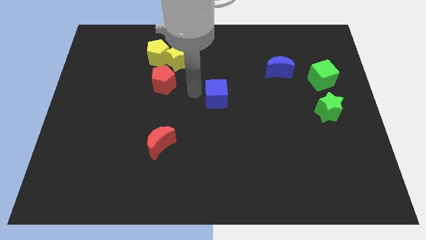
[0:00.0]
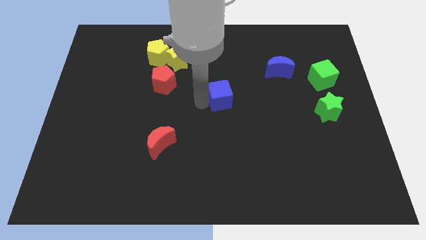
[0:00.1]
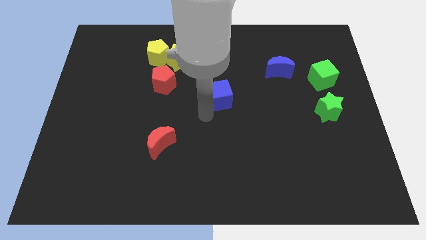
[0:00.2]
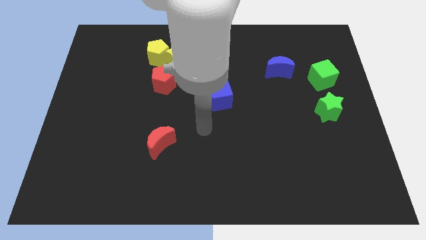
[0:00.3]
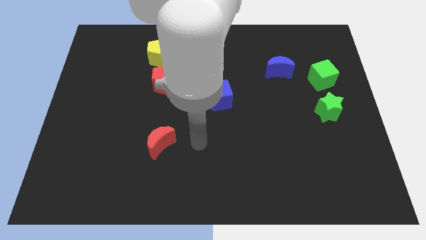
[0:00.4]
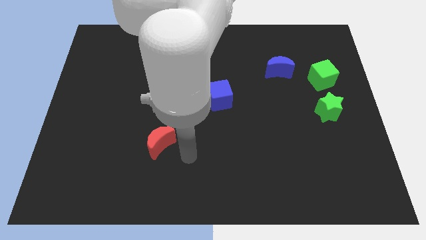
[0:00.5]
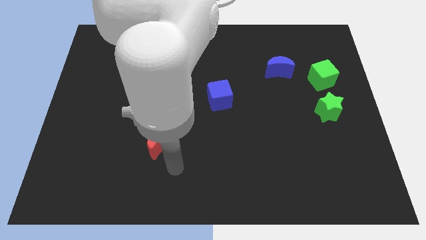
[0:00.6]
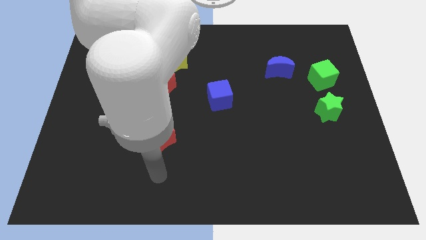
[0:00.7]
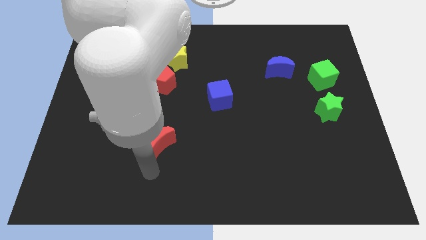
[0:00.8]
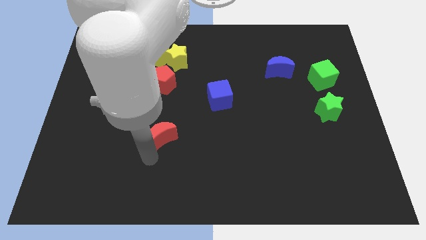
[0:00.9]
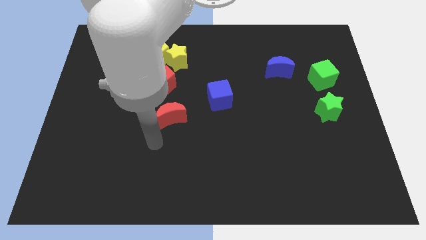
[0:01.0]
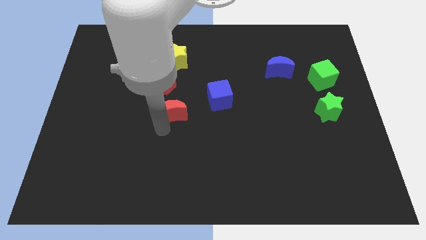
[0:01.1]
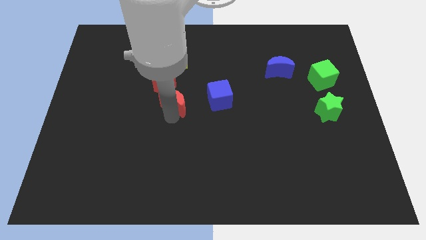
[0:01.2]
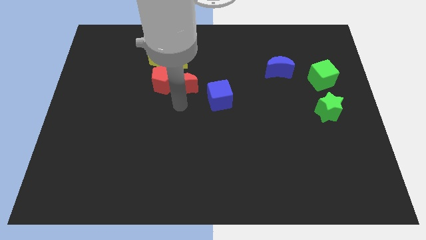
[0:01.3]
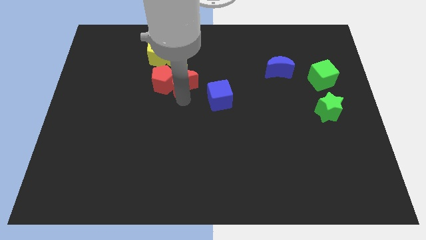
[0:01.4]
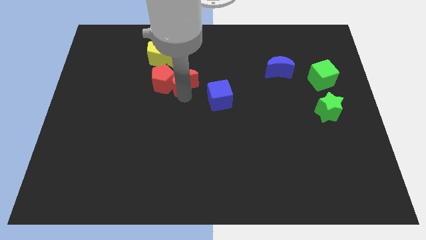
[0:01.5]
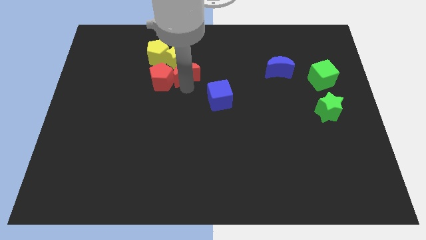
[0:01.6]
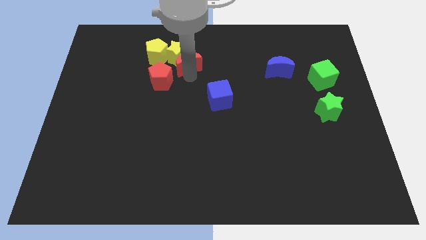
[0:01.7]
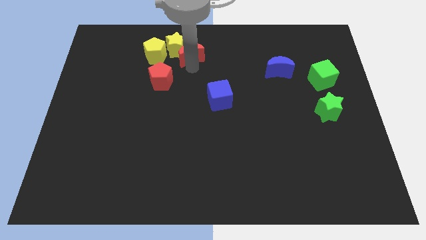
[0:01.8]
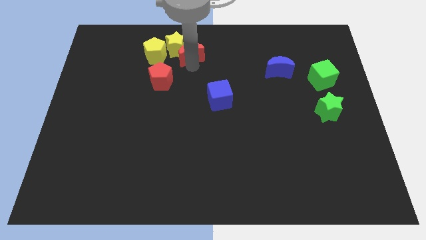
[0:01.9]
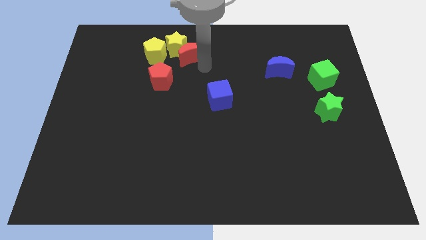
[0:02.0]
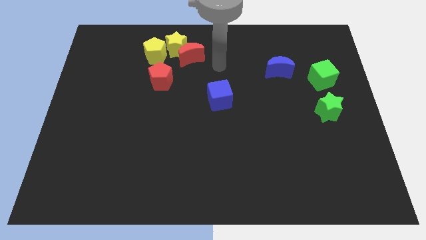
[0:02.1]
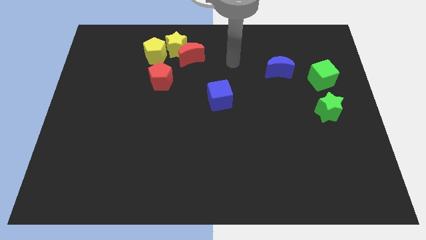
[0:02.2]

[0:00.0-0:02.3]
push the red crescent to the bottom right side of the yellow star

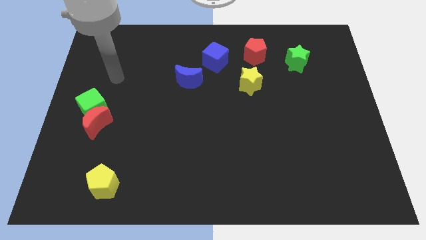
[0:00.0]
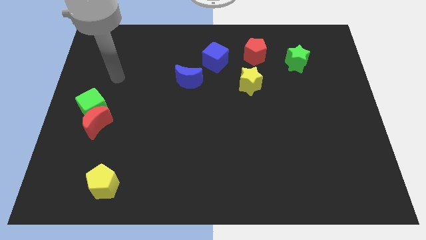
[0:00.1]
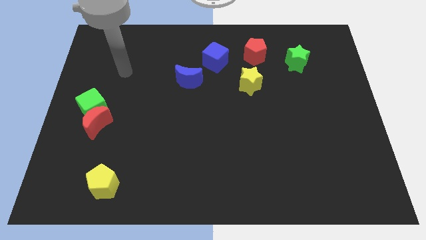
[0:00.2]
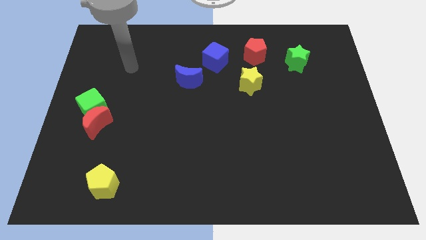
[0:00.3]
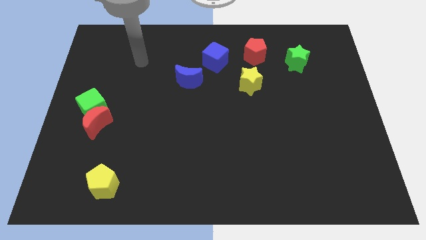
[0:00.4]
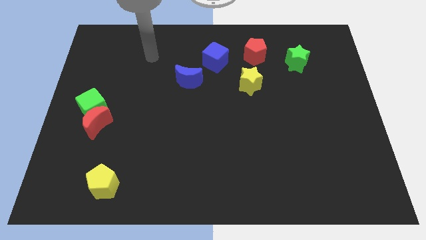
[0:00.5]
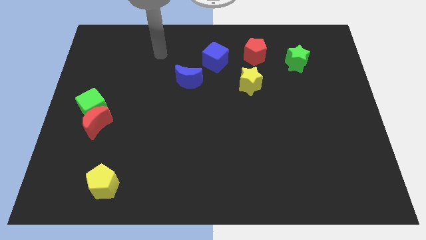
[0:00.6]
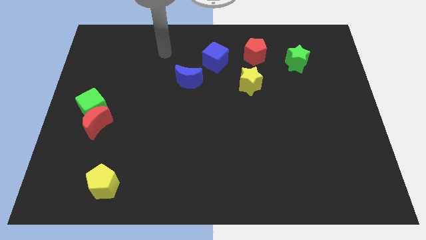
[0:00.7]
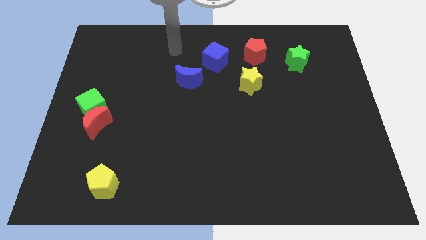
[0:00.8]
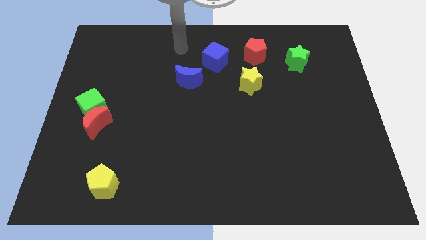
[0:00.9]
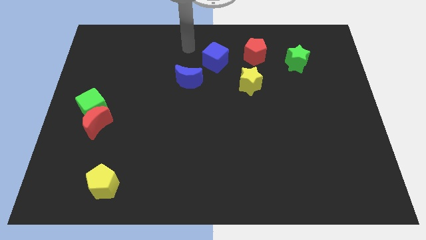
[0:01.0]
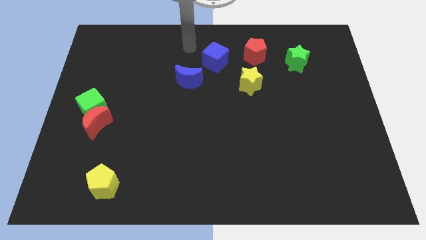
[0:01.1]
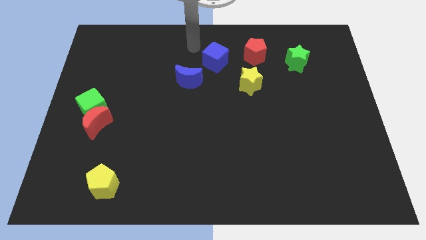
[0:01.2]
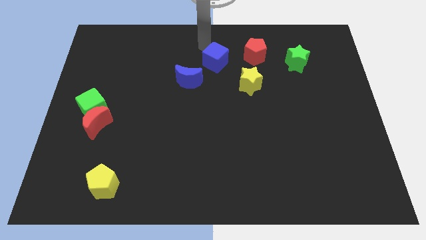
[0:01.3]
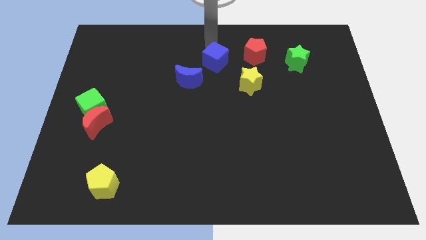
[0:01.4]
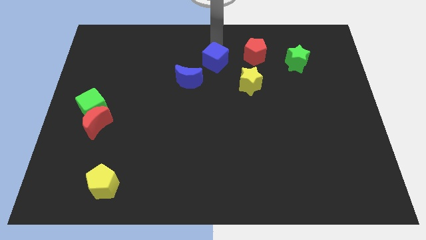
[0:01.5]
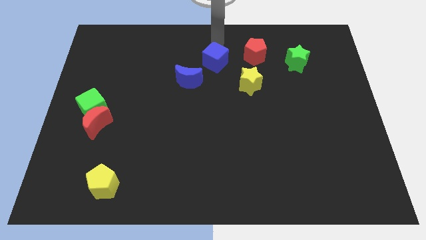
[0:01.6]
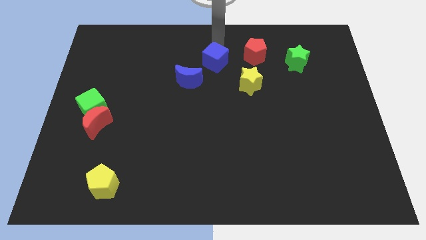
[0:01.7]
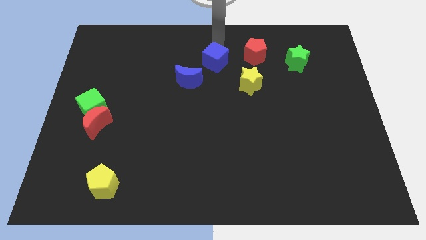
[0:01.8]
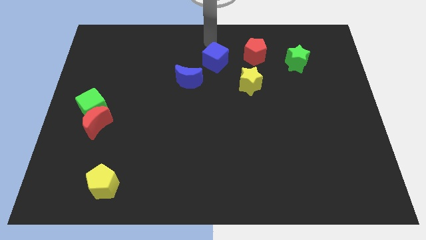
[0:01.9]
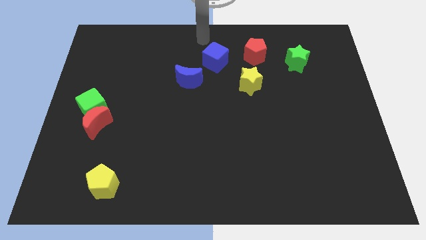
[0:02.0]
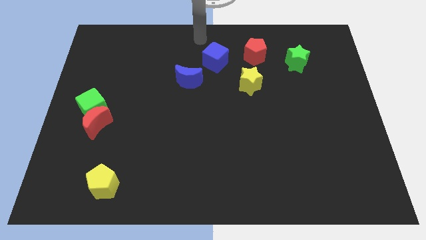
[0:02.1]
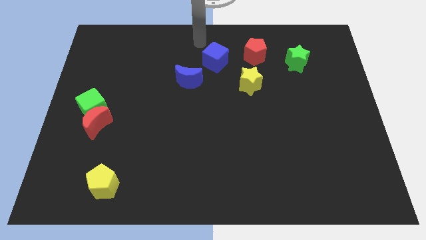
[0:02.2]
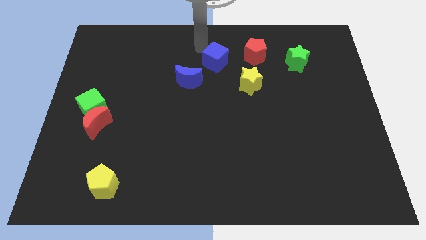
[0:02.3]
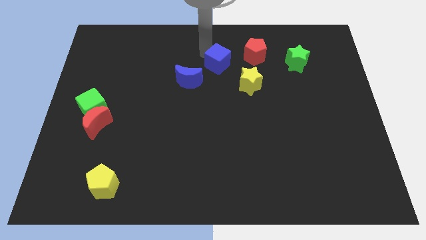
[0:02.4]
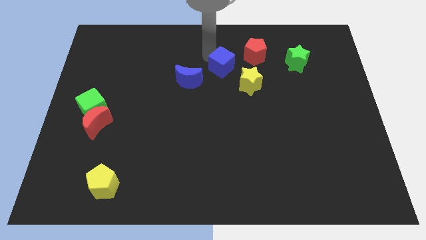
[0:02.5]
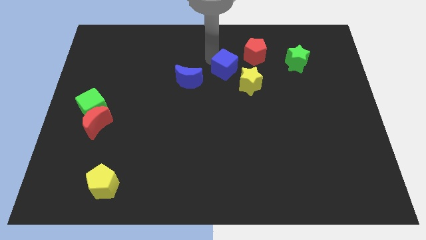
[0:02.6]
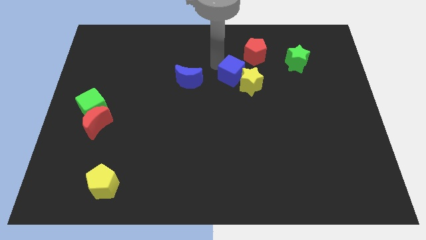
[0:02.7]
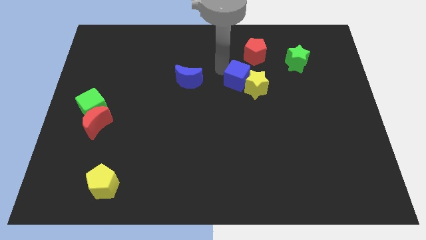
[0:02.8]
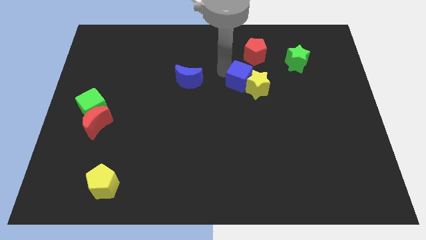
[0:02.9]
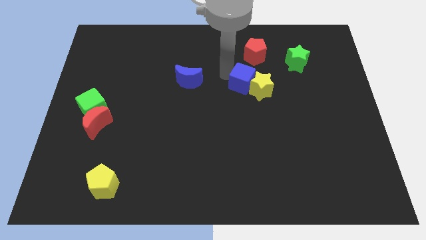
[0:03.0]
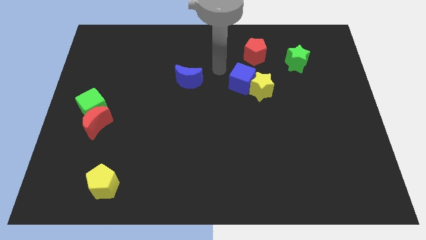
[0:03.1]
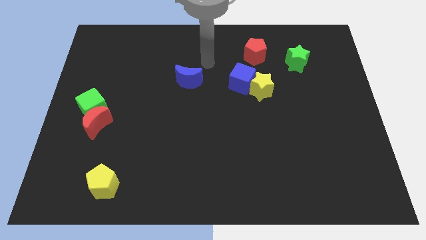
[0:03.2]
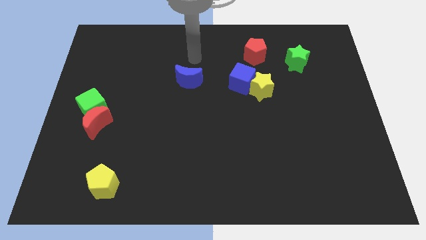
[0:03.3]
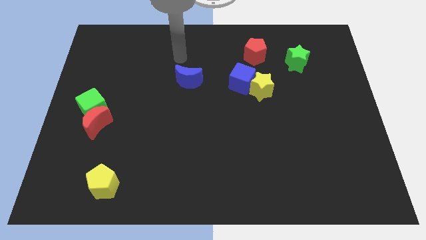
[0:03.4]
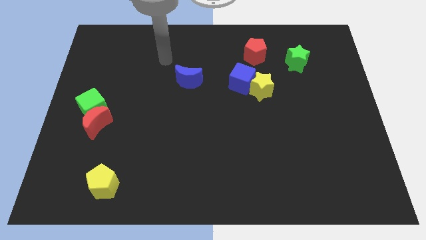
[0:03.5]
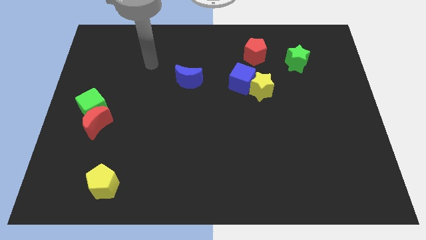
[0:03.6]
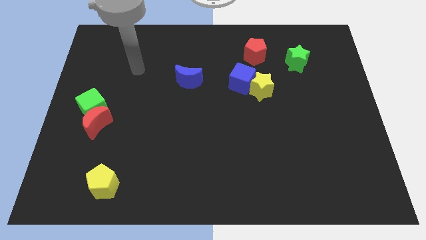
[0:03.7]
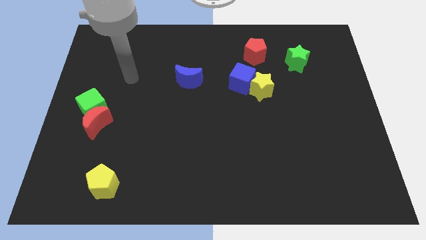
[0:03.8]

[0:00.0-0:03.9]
move the blue cube towards the left side of the yellow star

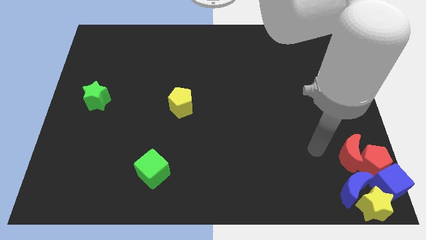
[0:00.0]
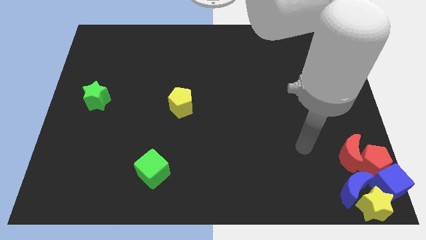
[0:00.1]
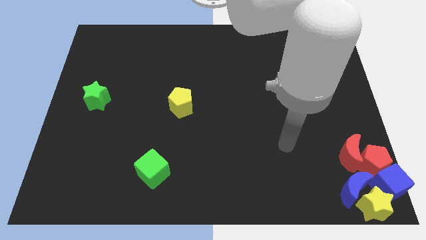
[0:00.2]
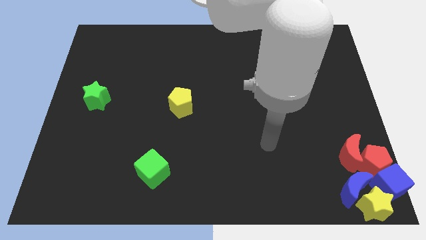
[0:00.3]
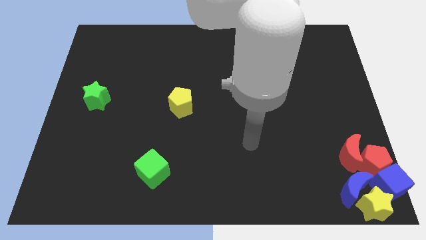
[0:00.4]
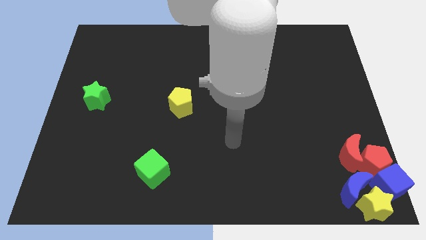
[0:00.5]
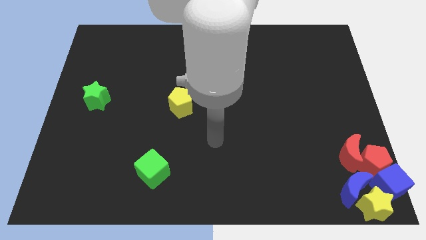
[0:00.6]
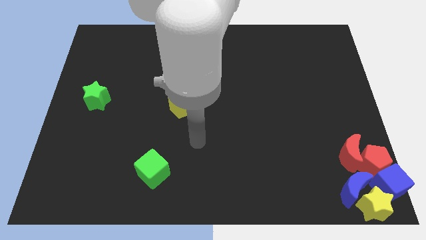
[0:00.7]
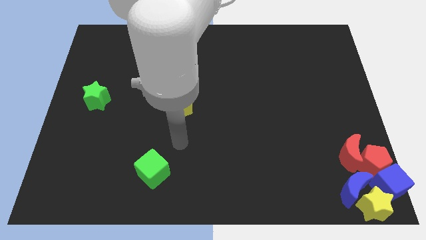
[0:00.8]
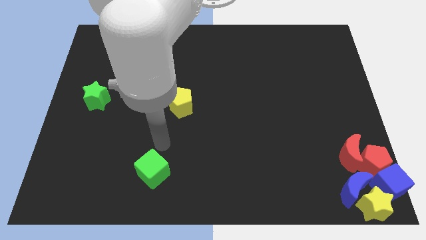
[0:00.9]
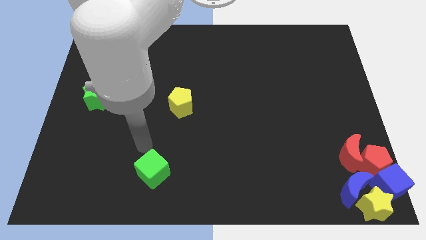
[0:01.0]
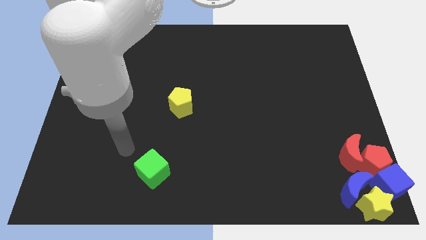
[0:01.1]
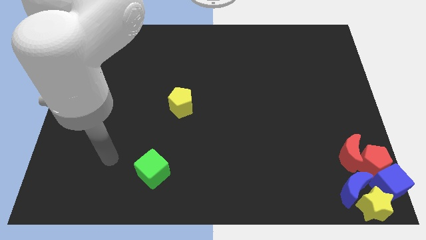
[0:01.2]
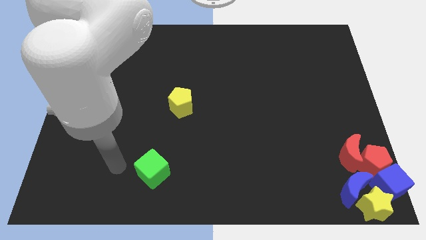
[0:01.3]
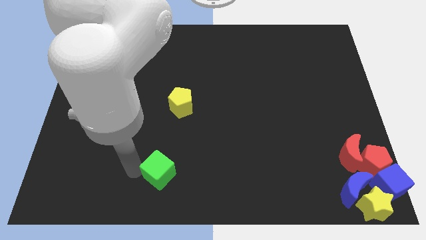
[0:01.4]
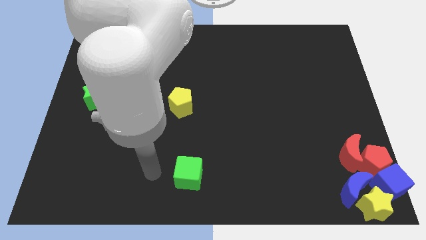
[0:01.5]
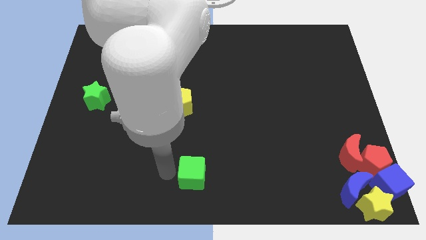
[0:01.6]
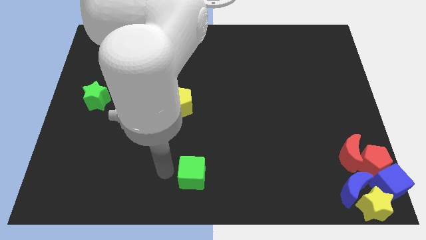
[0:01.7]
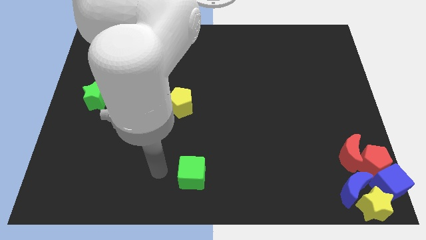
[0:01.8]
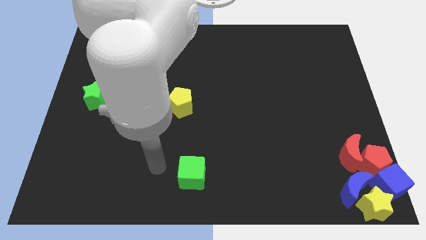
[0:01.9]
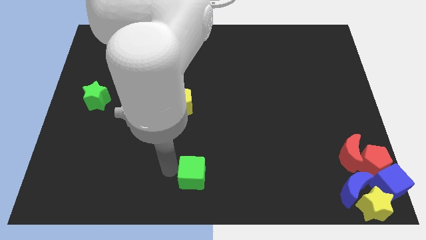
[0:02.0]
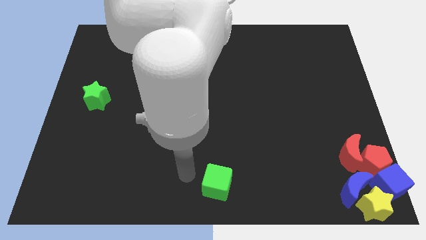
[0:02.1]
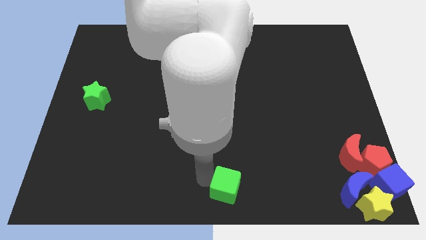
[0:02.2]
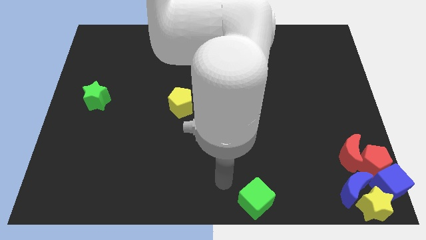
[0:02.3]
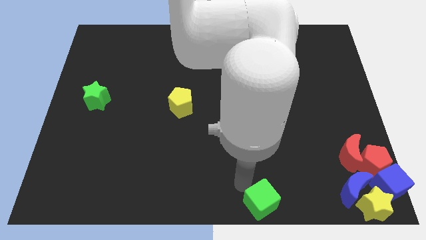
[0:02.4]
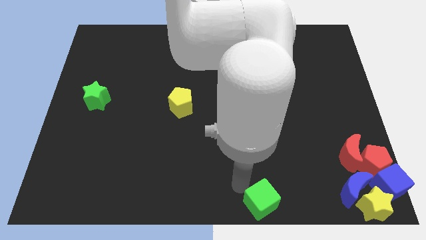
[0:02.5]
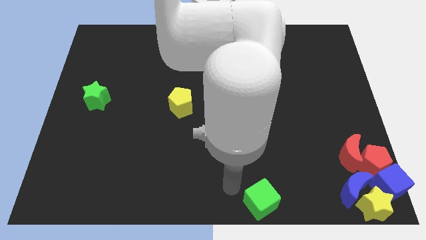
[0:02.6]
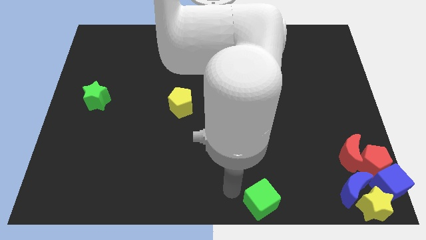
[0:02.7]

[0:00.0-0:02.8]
slide the green cube towards the left of the yellow star

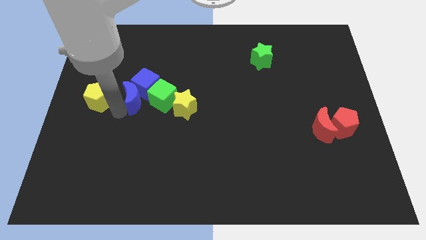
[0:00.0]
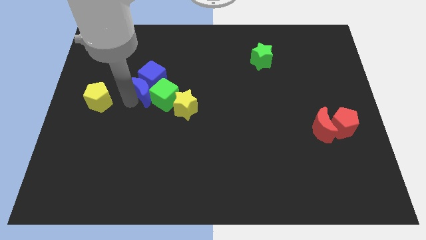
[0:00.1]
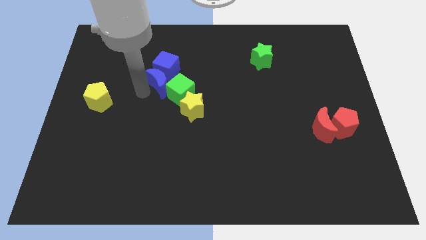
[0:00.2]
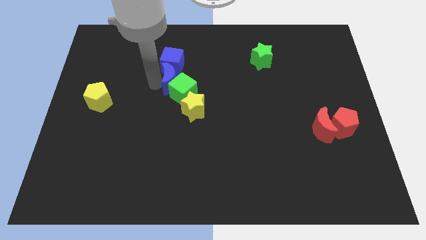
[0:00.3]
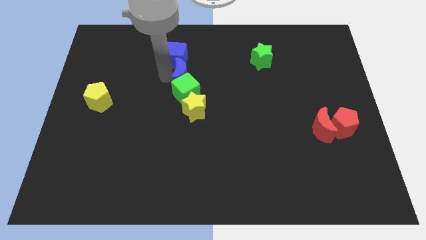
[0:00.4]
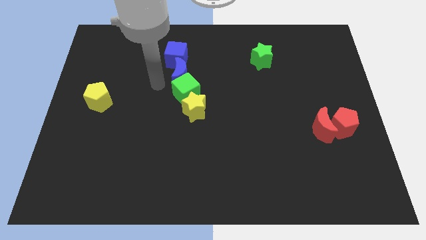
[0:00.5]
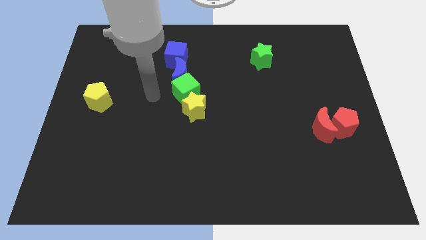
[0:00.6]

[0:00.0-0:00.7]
place blue crescent above green cube
